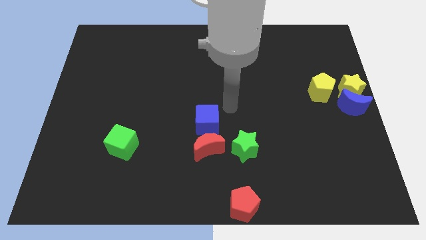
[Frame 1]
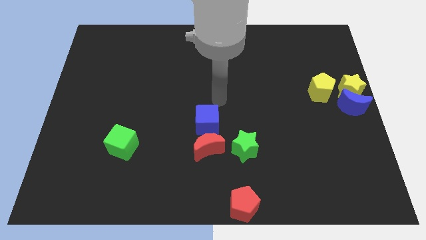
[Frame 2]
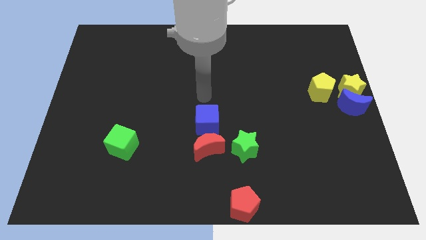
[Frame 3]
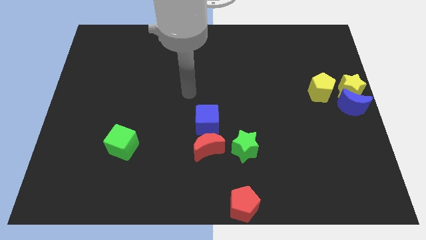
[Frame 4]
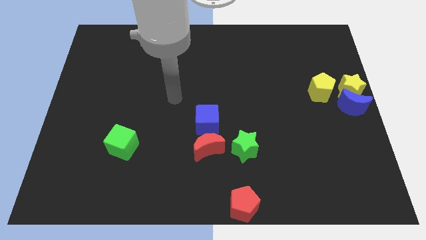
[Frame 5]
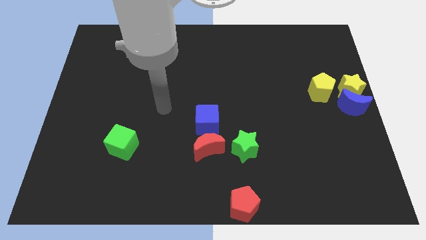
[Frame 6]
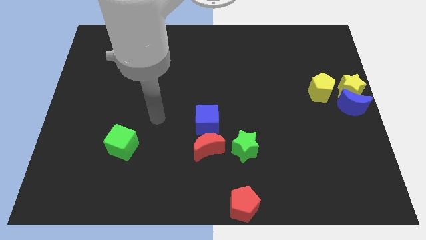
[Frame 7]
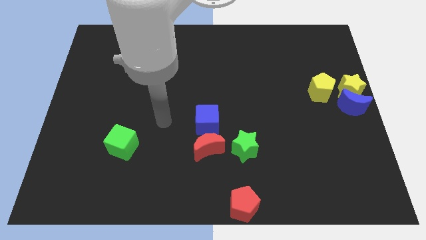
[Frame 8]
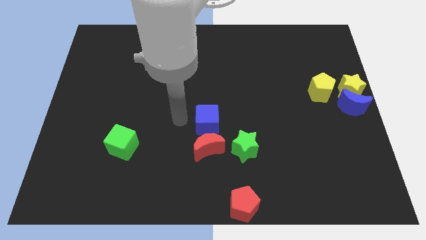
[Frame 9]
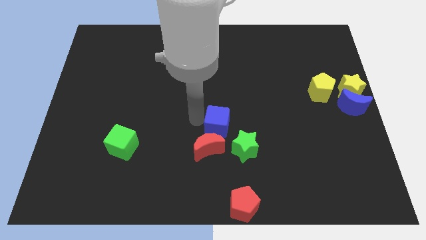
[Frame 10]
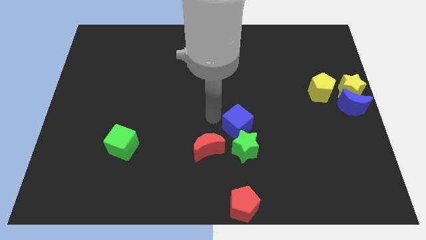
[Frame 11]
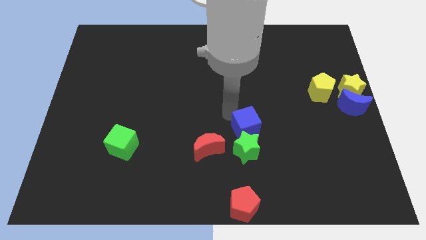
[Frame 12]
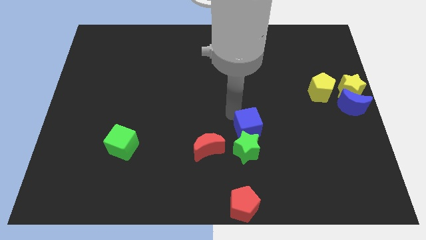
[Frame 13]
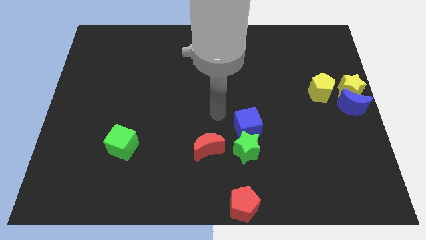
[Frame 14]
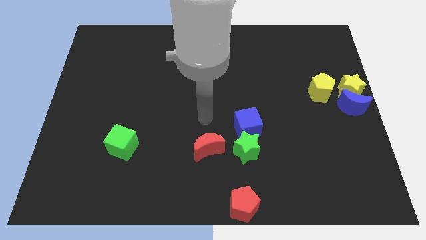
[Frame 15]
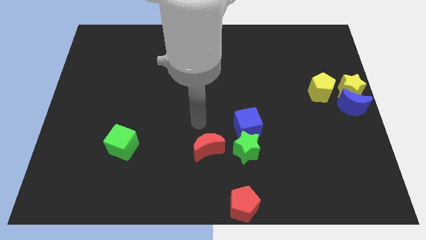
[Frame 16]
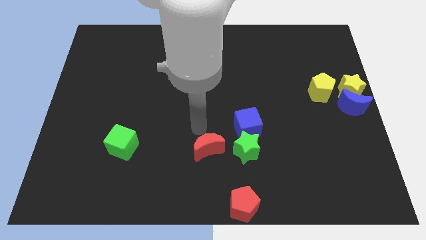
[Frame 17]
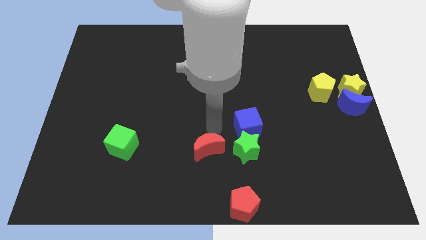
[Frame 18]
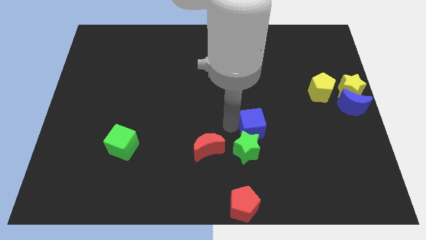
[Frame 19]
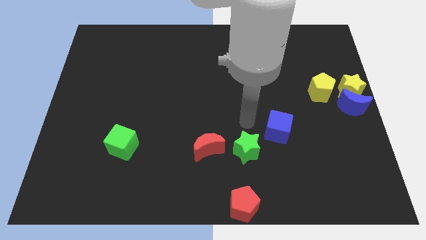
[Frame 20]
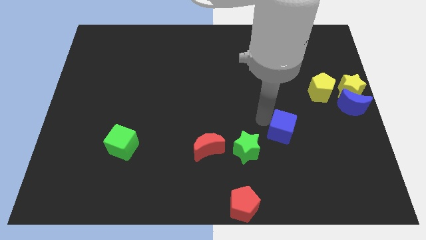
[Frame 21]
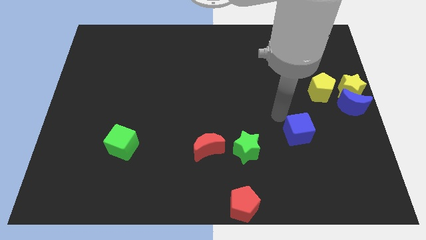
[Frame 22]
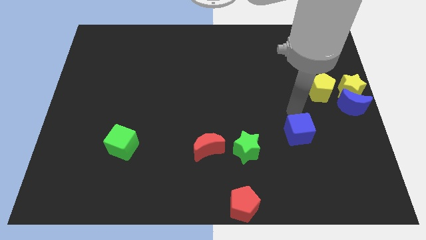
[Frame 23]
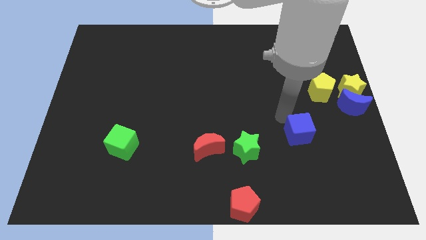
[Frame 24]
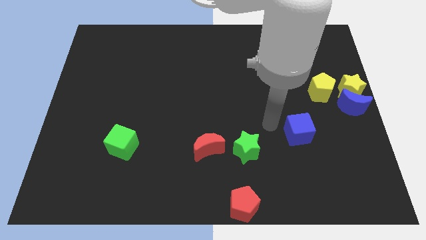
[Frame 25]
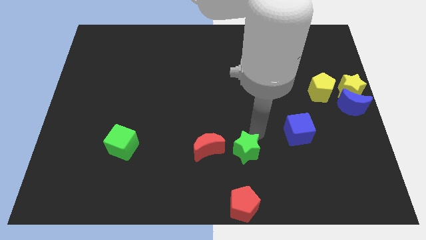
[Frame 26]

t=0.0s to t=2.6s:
push the blue cube to the bottom left side of the yellow pentagon

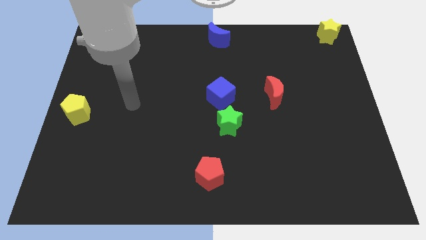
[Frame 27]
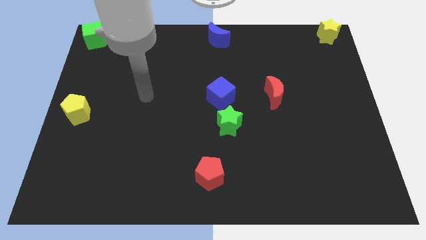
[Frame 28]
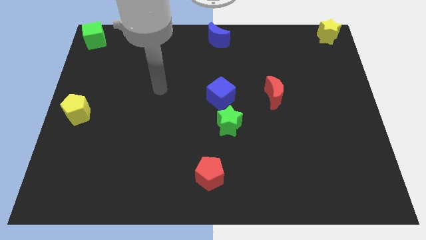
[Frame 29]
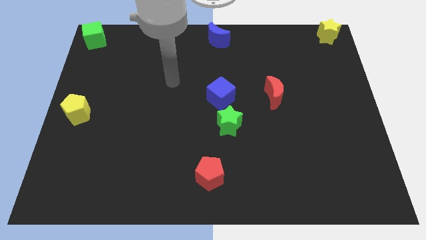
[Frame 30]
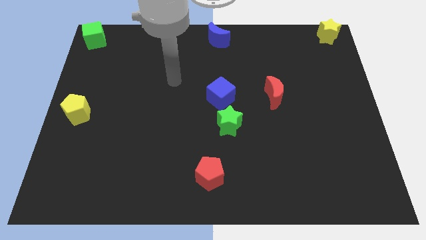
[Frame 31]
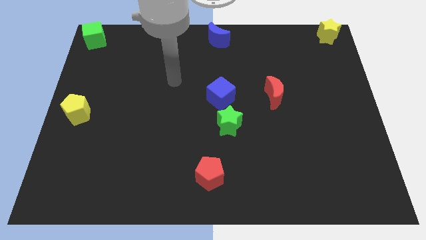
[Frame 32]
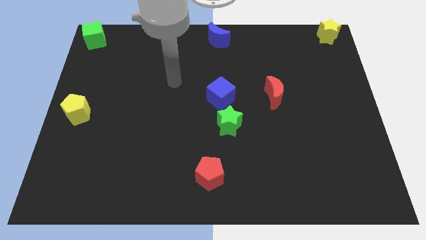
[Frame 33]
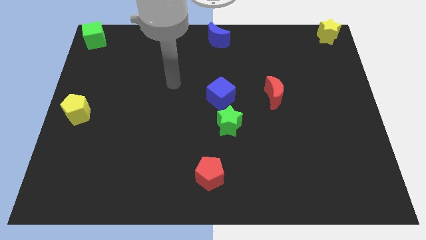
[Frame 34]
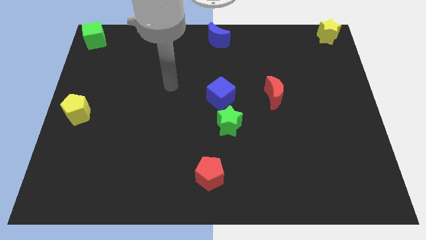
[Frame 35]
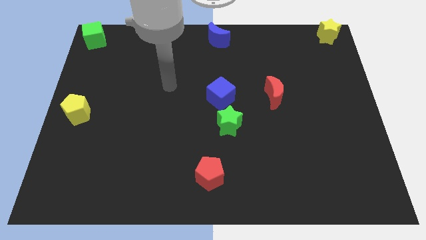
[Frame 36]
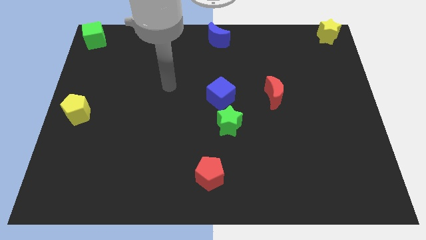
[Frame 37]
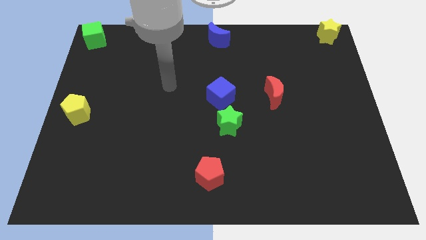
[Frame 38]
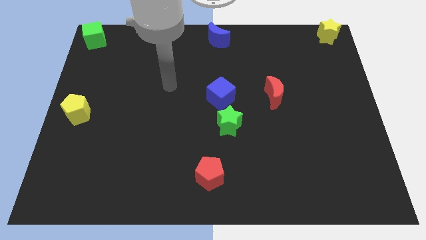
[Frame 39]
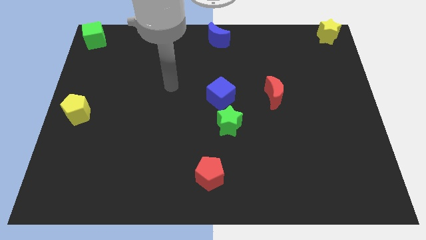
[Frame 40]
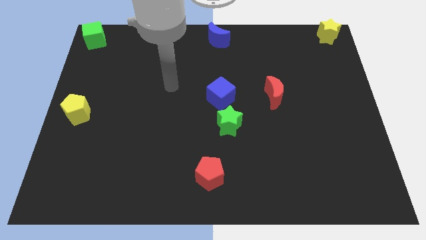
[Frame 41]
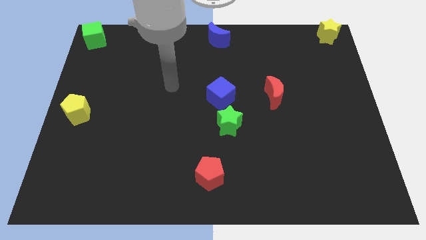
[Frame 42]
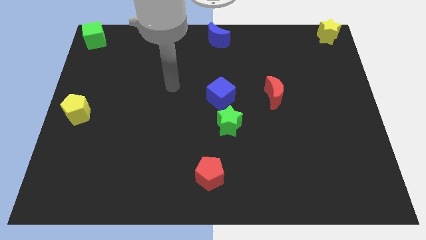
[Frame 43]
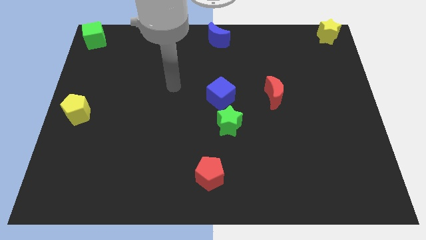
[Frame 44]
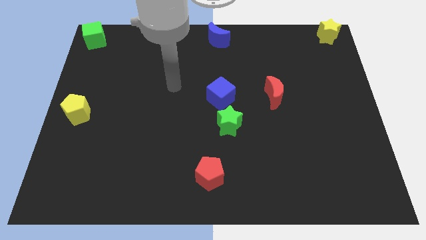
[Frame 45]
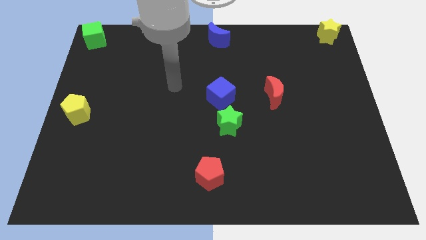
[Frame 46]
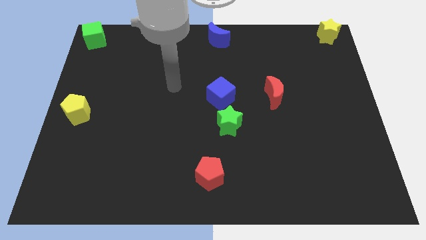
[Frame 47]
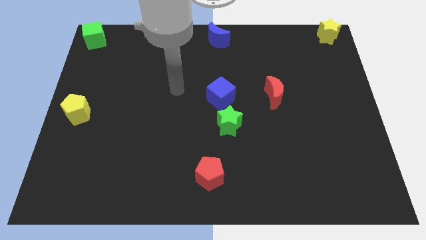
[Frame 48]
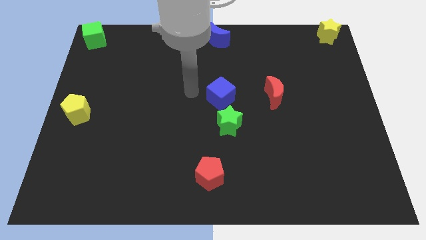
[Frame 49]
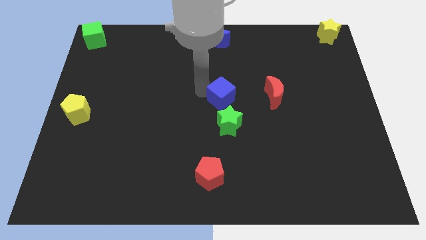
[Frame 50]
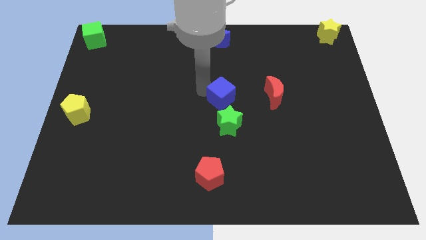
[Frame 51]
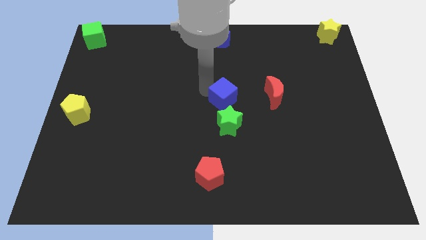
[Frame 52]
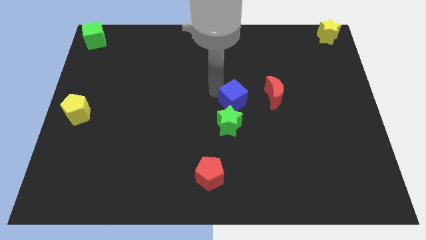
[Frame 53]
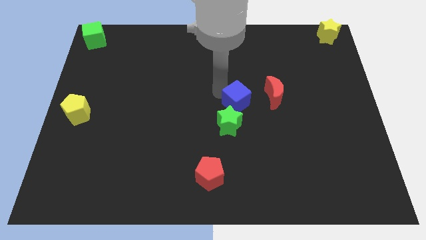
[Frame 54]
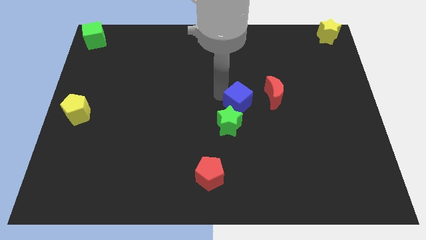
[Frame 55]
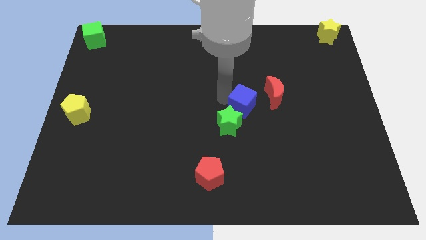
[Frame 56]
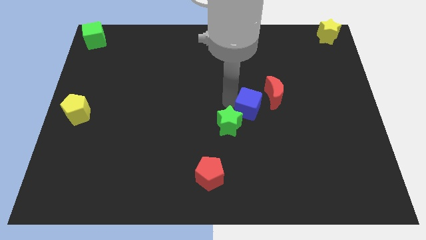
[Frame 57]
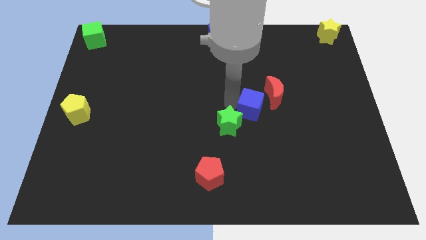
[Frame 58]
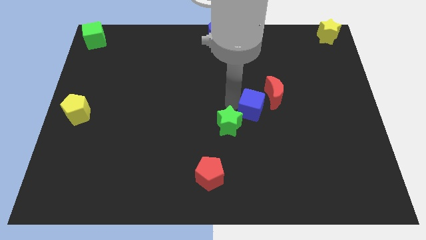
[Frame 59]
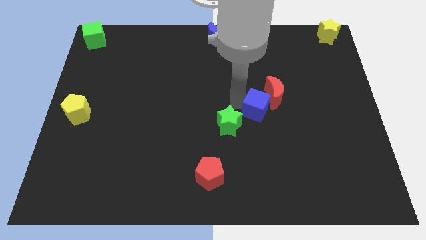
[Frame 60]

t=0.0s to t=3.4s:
move your arm and slightly push the blue cube between red moon and green star

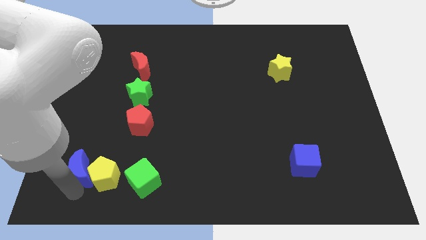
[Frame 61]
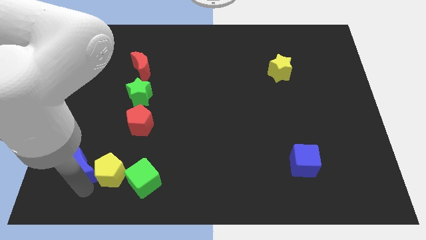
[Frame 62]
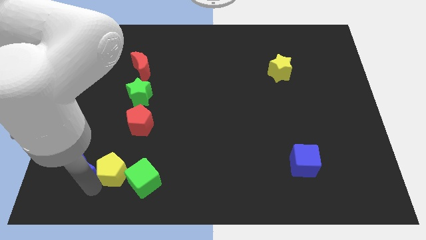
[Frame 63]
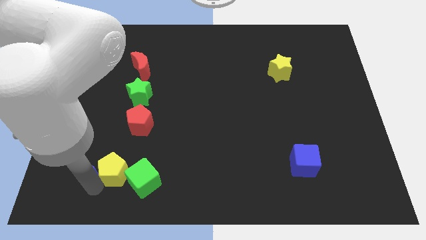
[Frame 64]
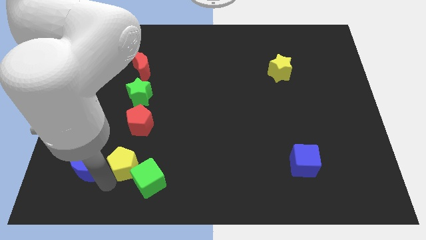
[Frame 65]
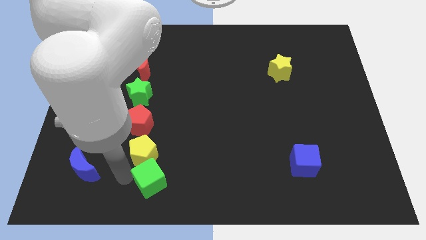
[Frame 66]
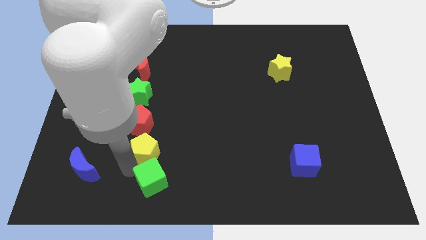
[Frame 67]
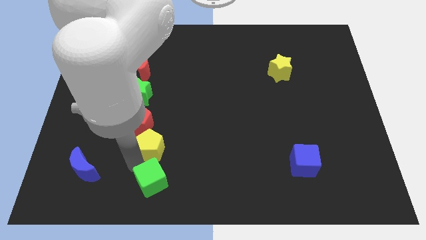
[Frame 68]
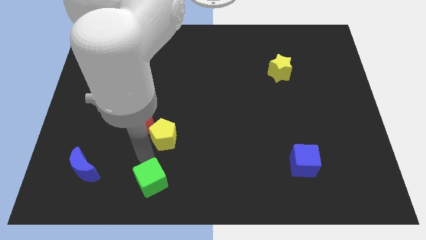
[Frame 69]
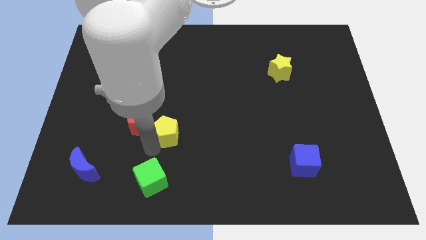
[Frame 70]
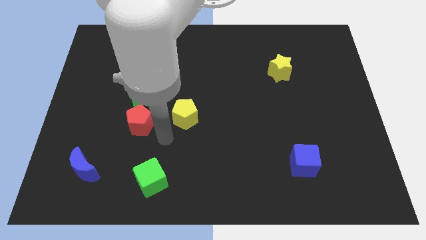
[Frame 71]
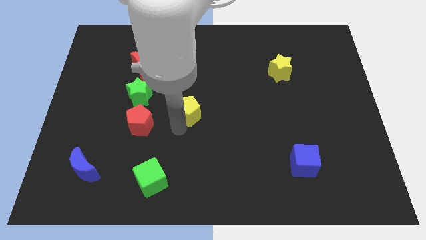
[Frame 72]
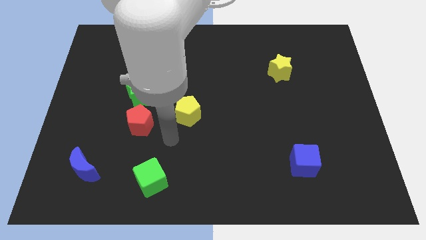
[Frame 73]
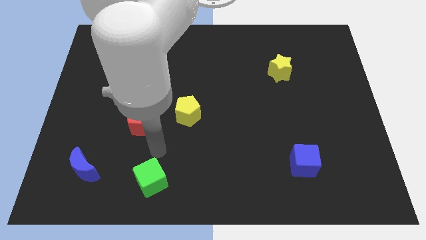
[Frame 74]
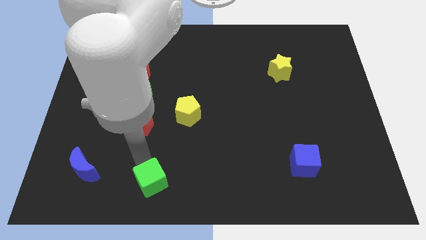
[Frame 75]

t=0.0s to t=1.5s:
place yellow pentagon to the right of red pentagon

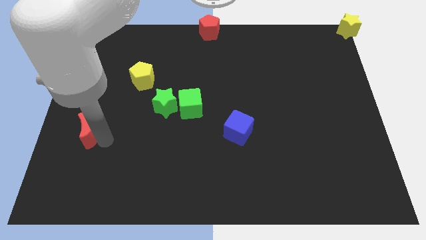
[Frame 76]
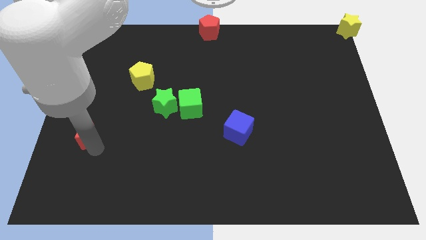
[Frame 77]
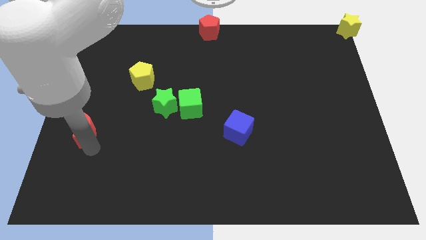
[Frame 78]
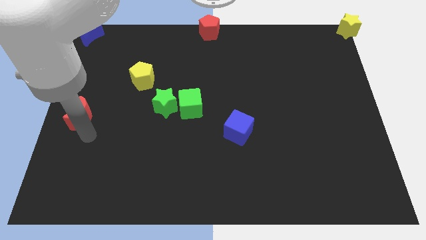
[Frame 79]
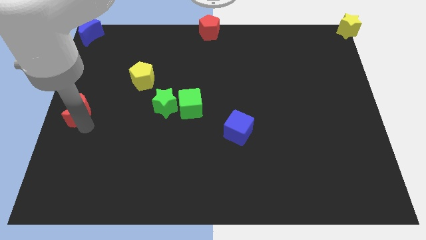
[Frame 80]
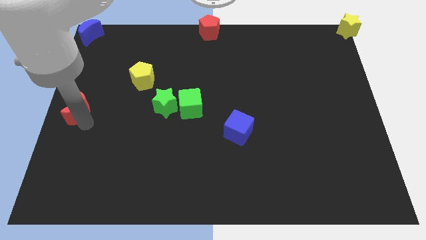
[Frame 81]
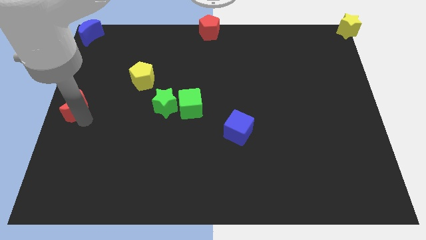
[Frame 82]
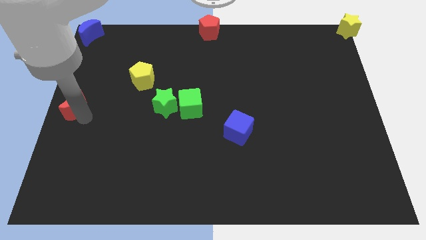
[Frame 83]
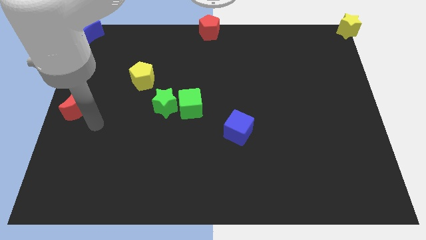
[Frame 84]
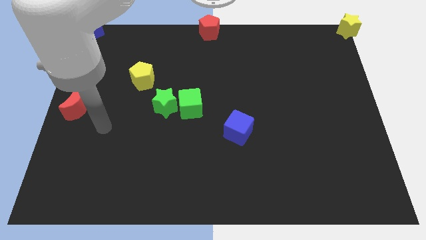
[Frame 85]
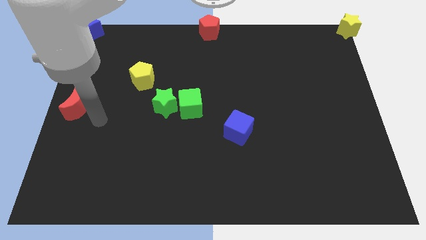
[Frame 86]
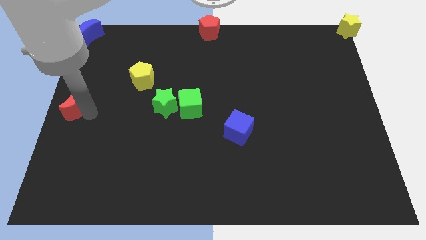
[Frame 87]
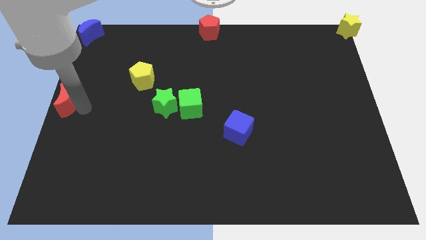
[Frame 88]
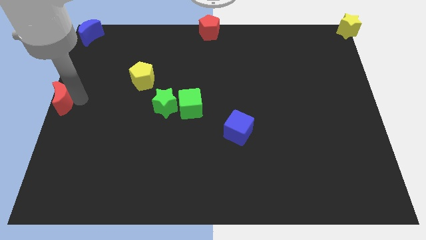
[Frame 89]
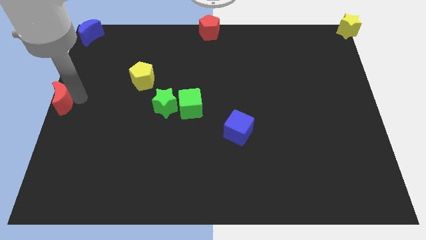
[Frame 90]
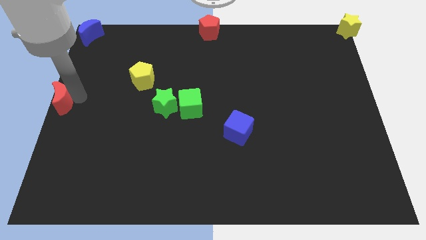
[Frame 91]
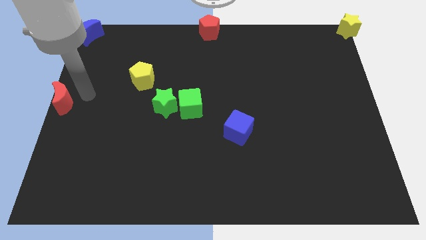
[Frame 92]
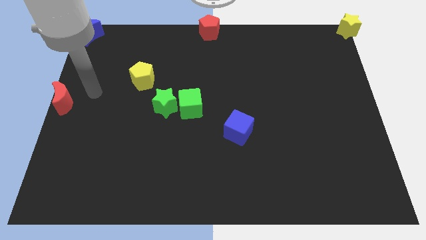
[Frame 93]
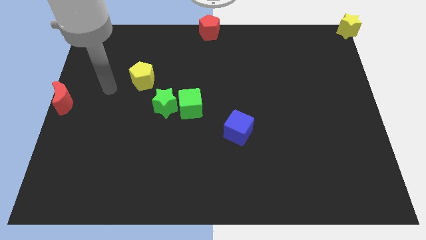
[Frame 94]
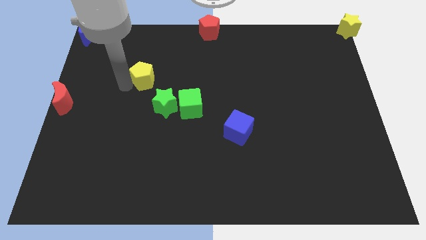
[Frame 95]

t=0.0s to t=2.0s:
place the red moon to the middle left
